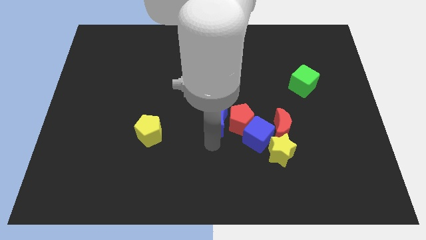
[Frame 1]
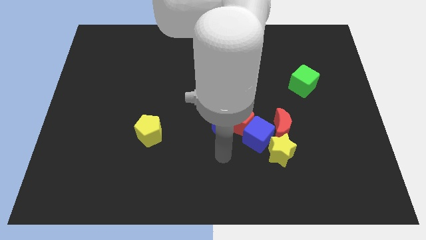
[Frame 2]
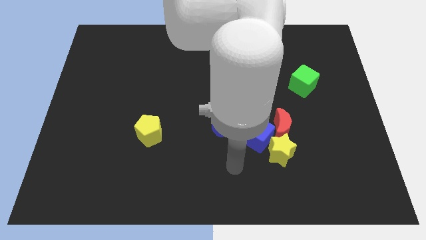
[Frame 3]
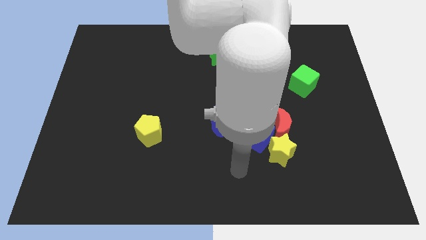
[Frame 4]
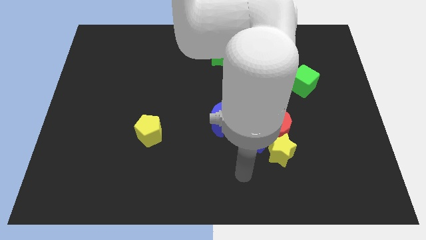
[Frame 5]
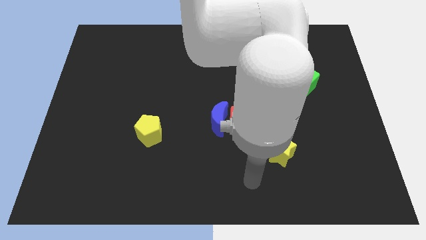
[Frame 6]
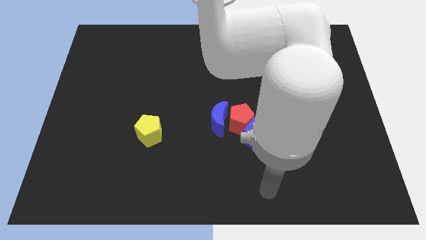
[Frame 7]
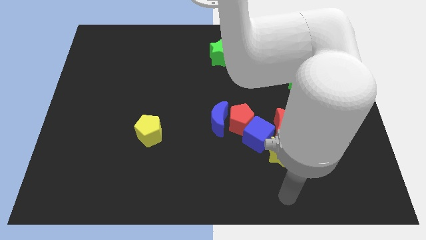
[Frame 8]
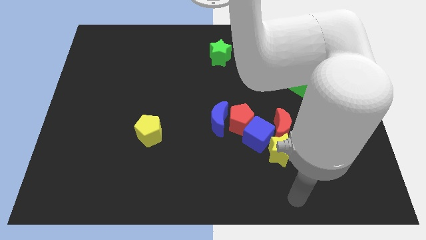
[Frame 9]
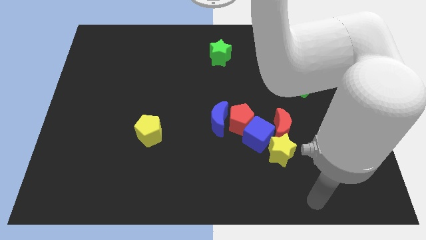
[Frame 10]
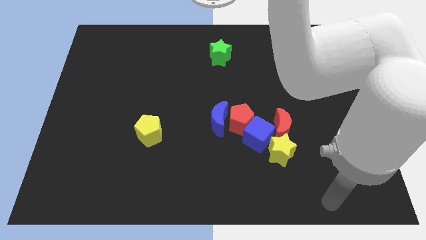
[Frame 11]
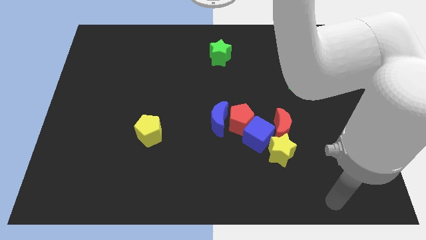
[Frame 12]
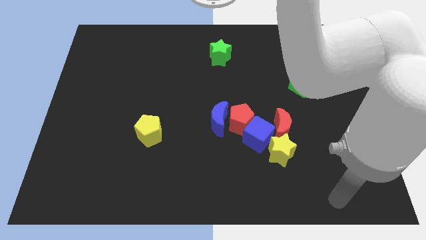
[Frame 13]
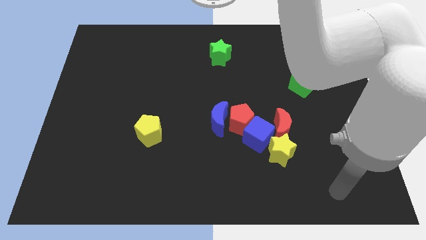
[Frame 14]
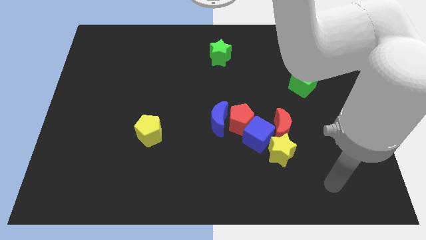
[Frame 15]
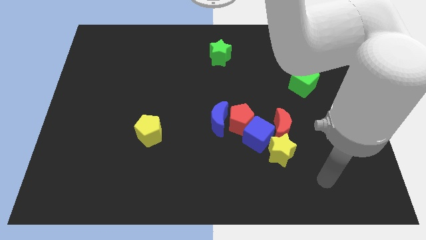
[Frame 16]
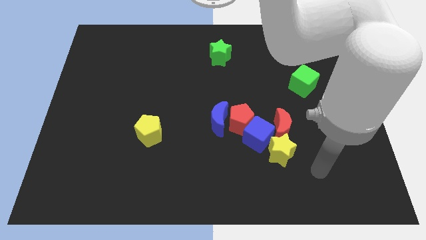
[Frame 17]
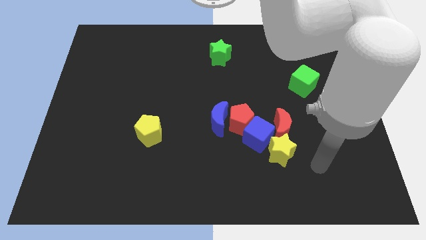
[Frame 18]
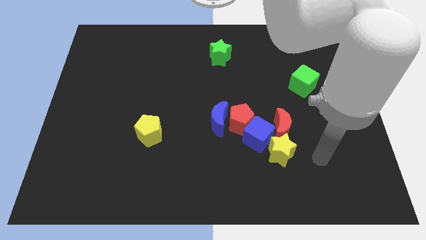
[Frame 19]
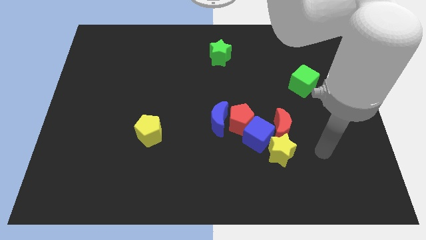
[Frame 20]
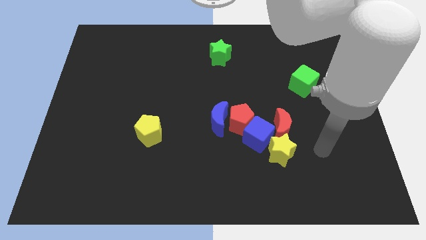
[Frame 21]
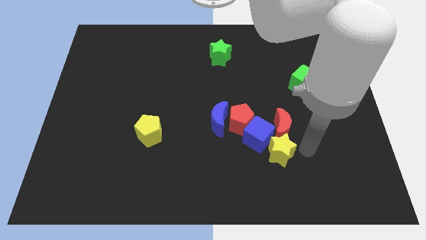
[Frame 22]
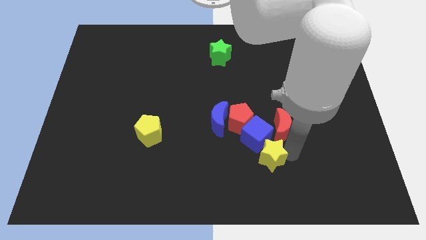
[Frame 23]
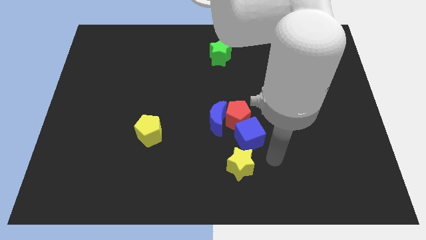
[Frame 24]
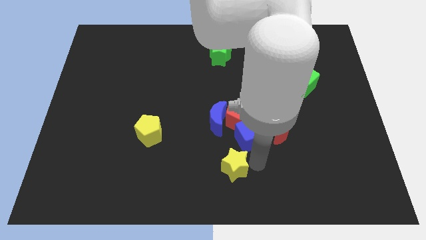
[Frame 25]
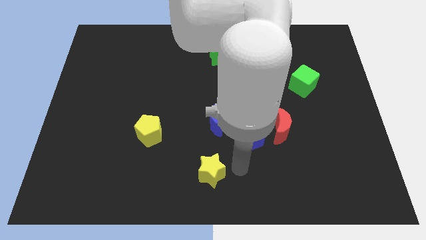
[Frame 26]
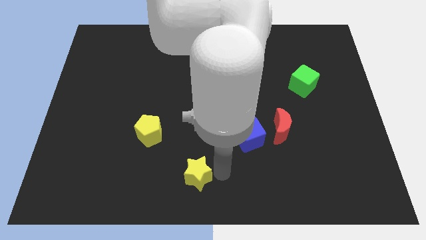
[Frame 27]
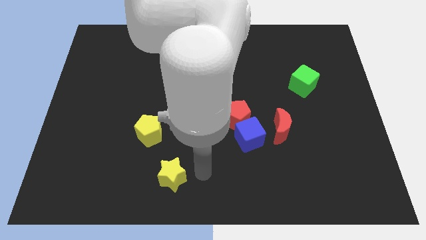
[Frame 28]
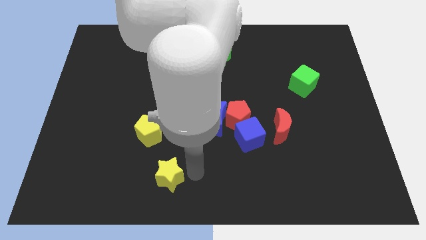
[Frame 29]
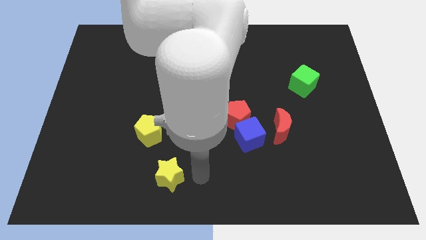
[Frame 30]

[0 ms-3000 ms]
separate yellow star from red moon

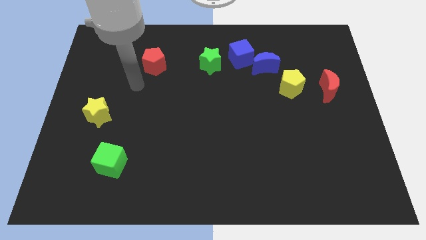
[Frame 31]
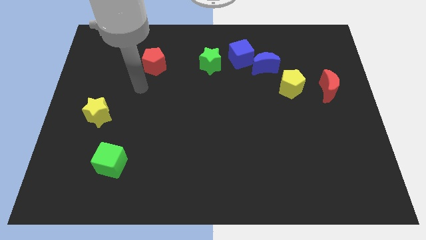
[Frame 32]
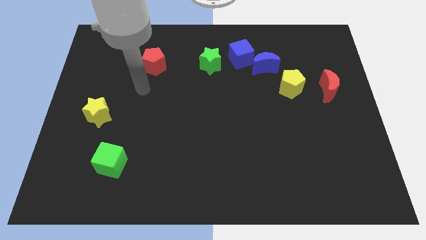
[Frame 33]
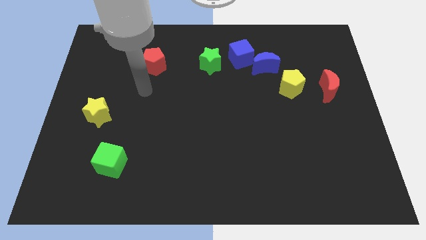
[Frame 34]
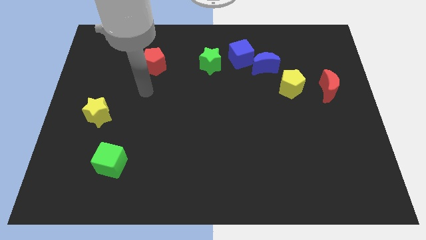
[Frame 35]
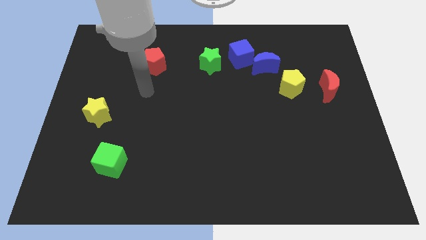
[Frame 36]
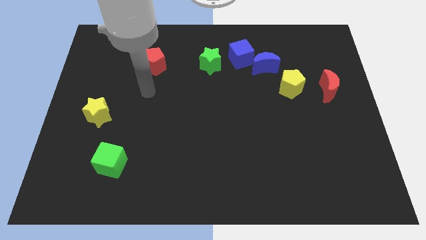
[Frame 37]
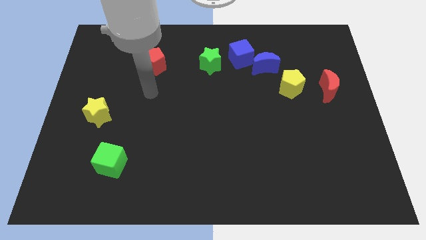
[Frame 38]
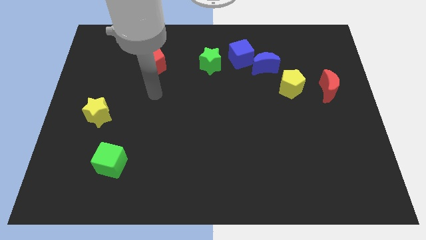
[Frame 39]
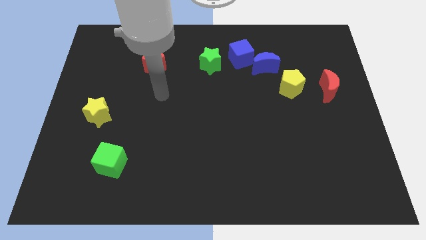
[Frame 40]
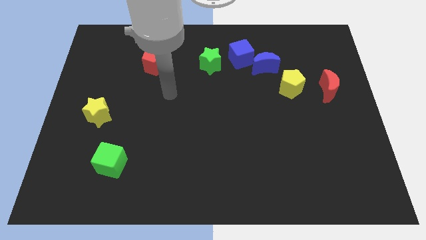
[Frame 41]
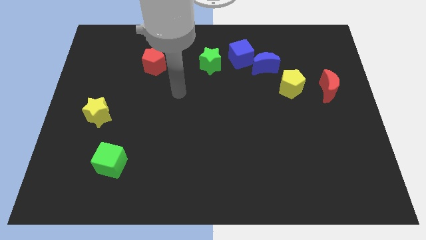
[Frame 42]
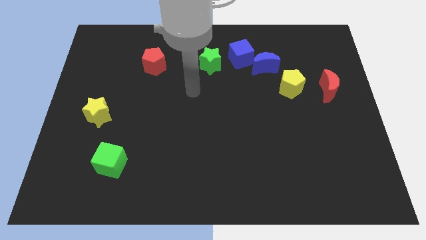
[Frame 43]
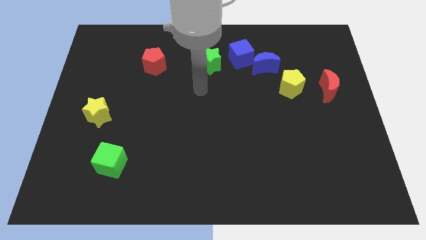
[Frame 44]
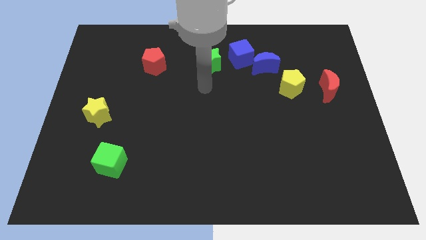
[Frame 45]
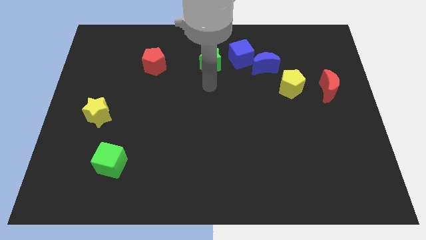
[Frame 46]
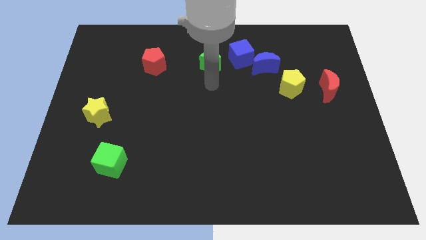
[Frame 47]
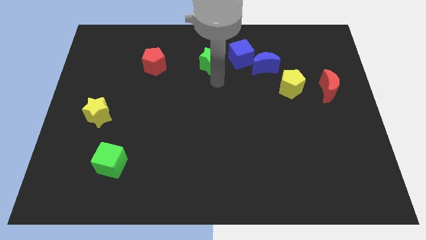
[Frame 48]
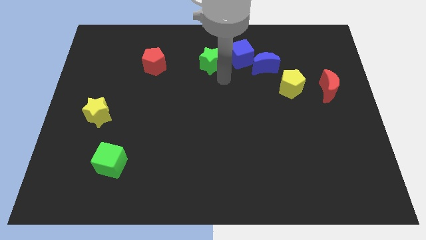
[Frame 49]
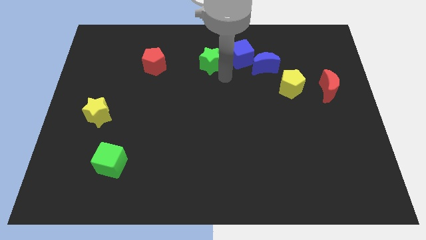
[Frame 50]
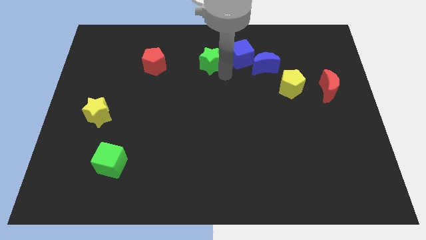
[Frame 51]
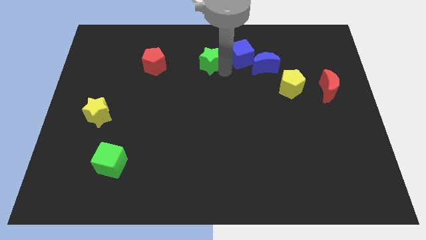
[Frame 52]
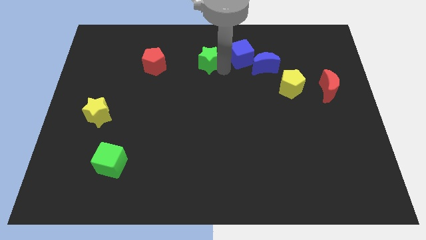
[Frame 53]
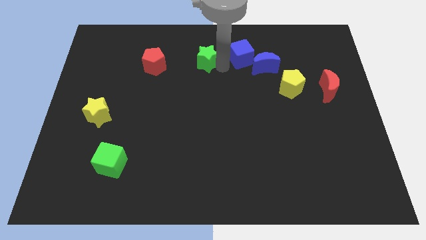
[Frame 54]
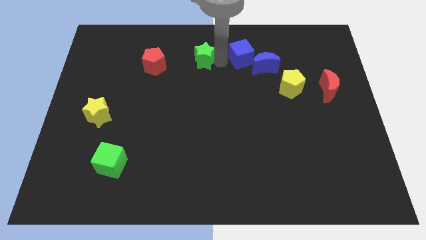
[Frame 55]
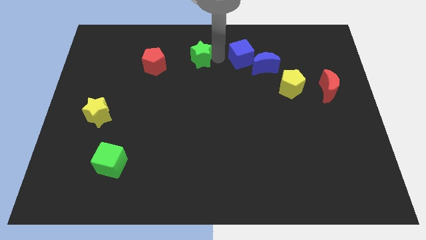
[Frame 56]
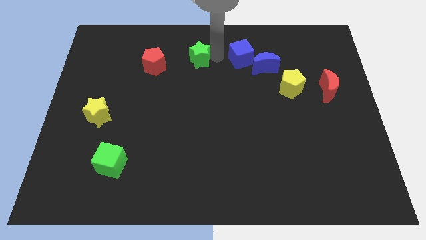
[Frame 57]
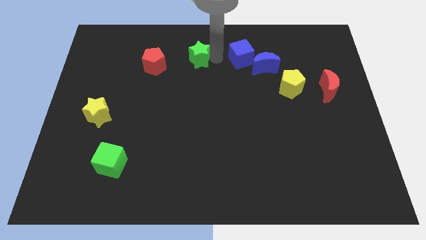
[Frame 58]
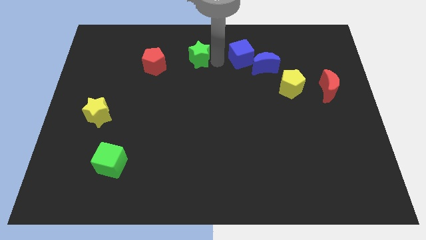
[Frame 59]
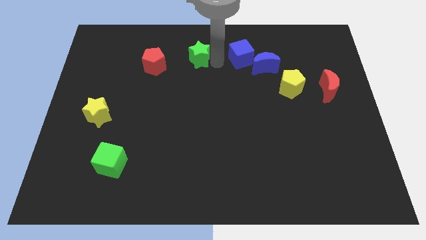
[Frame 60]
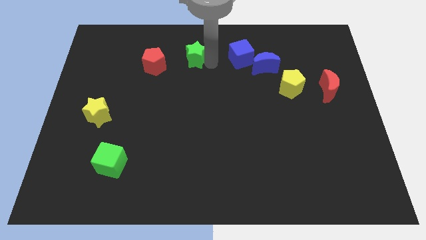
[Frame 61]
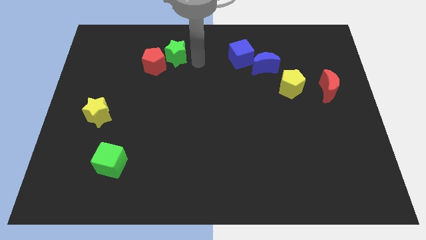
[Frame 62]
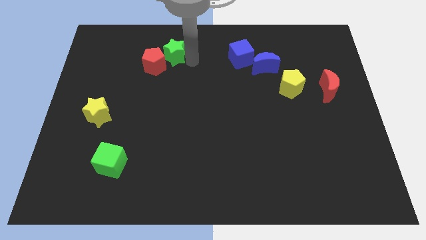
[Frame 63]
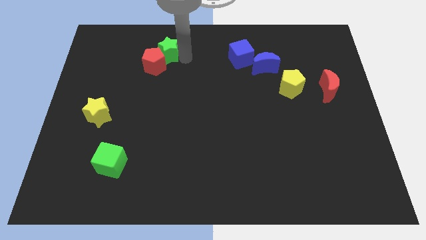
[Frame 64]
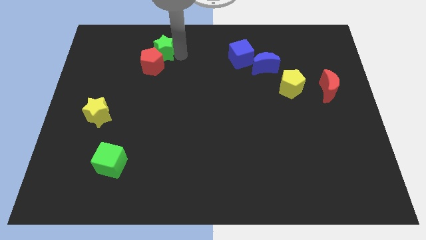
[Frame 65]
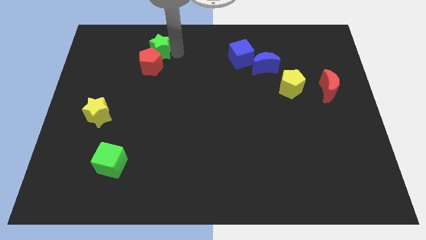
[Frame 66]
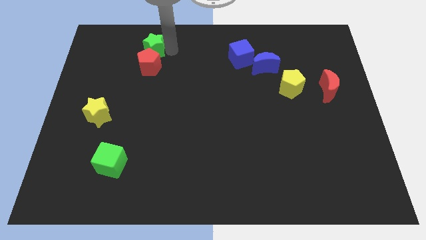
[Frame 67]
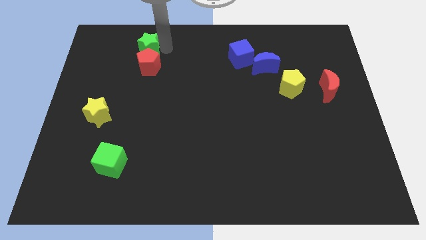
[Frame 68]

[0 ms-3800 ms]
push the green star above the red pentagon

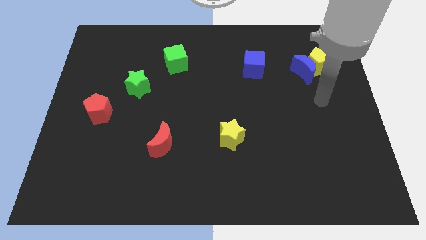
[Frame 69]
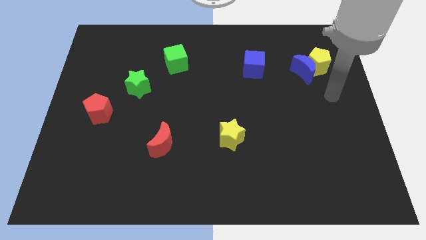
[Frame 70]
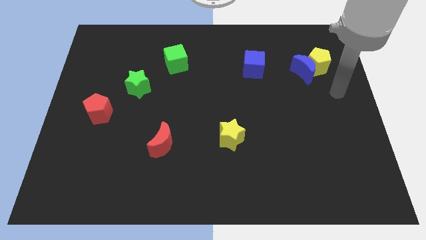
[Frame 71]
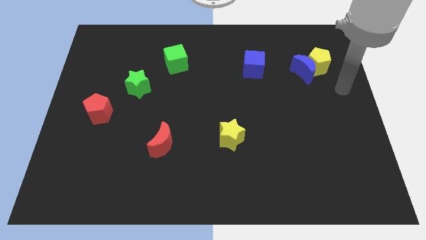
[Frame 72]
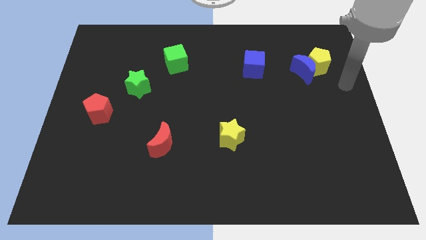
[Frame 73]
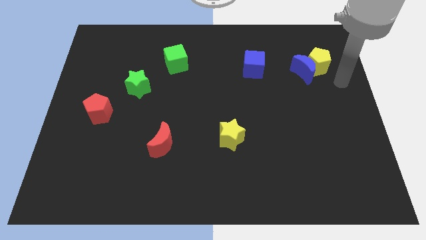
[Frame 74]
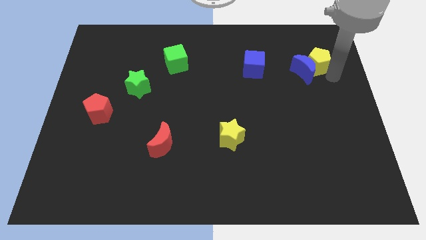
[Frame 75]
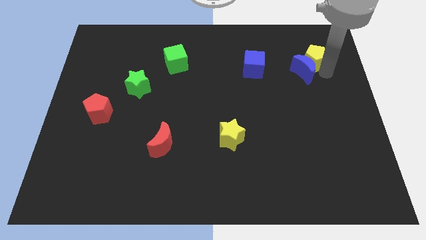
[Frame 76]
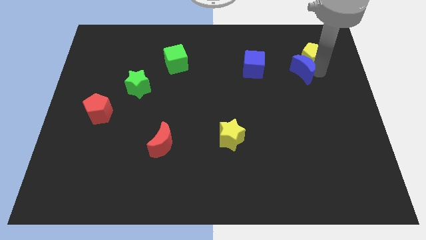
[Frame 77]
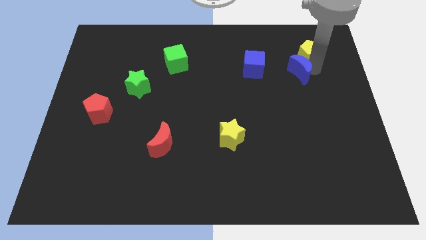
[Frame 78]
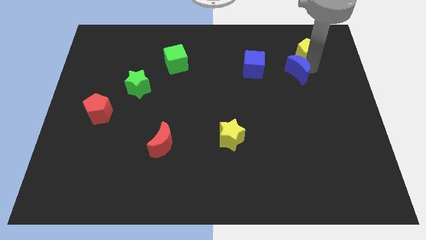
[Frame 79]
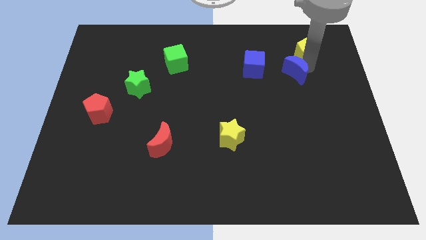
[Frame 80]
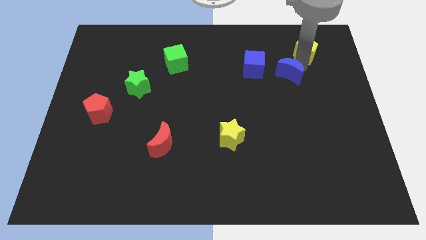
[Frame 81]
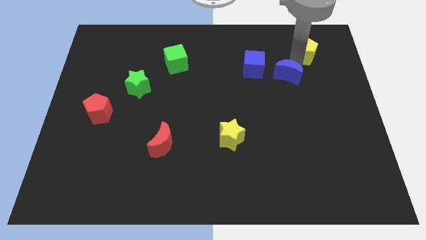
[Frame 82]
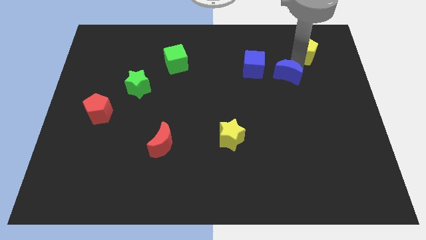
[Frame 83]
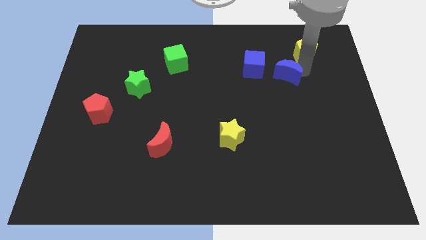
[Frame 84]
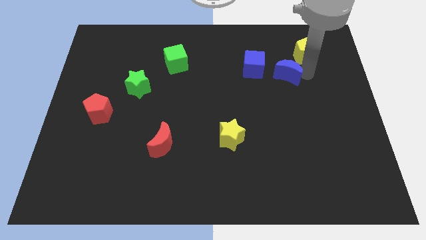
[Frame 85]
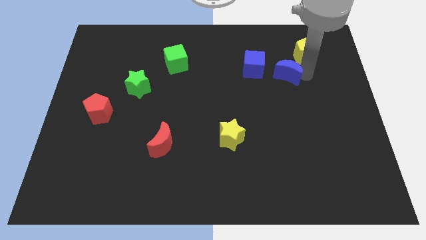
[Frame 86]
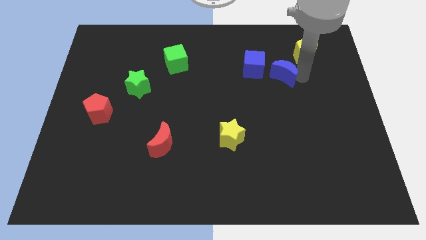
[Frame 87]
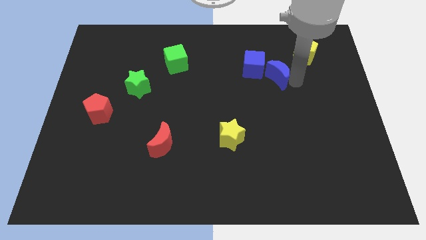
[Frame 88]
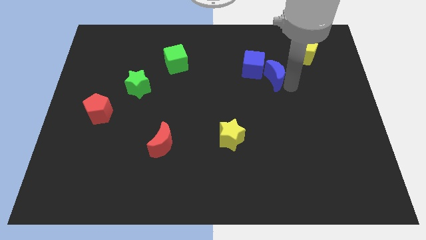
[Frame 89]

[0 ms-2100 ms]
separate the yellow pentagon and blue moon

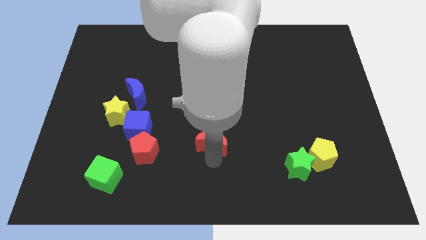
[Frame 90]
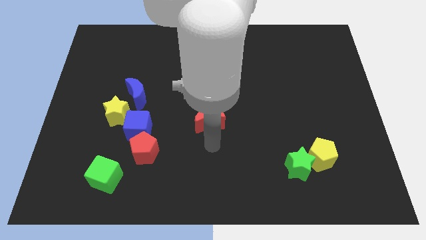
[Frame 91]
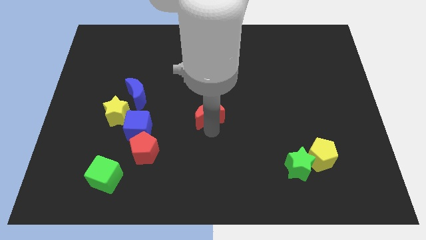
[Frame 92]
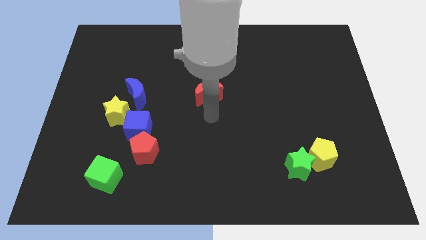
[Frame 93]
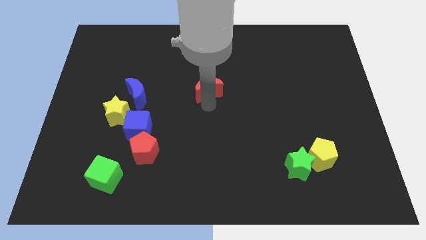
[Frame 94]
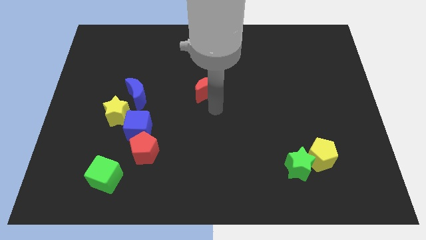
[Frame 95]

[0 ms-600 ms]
move the red moon towards the center of the board
